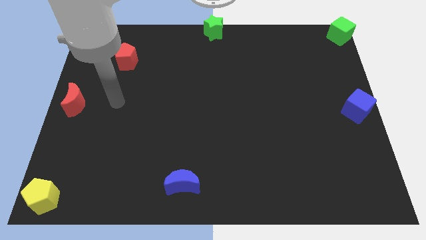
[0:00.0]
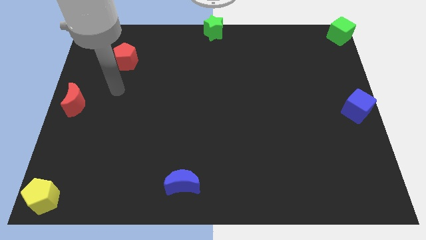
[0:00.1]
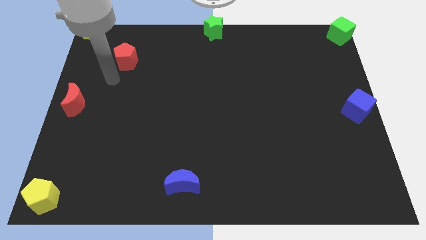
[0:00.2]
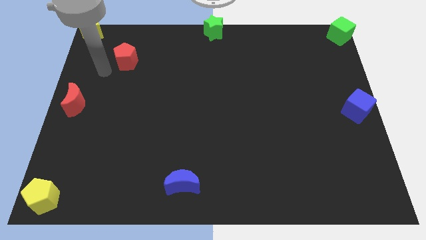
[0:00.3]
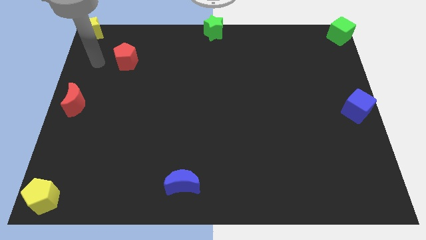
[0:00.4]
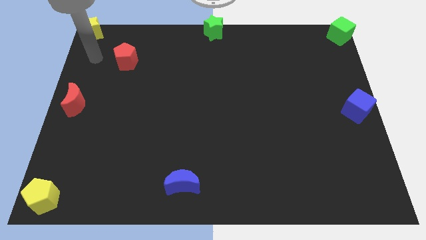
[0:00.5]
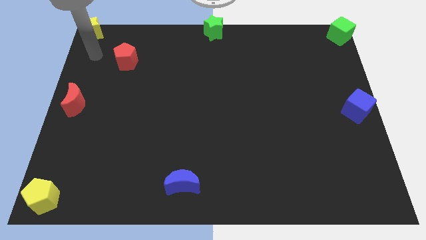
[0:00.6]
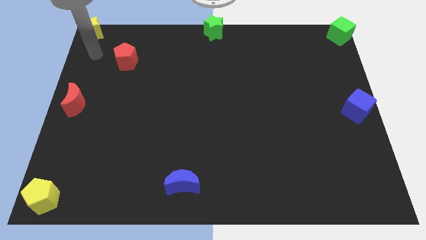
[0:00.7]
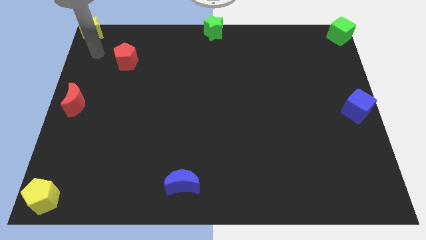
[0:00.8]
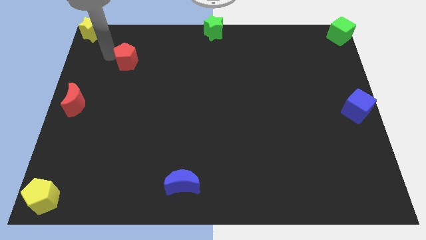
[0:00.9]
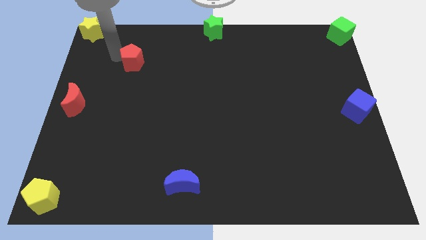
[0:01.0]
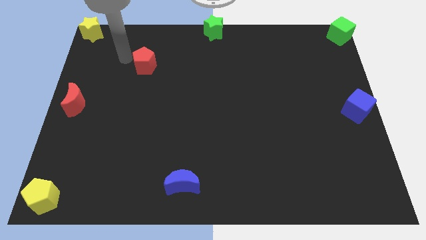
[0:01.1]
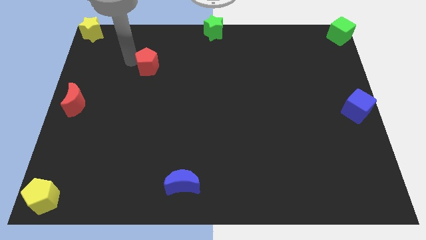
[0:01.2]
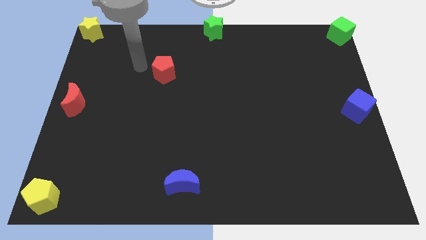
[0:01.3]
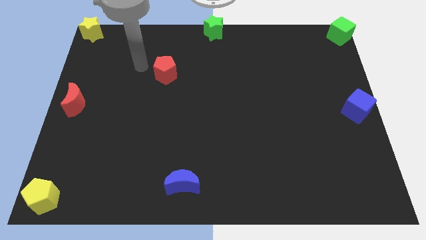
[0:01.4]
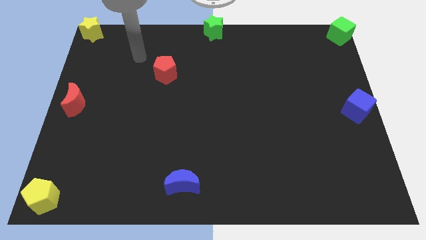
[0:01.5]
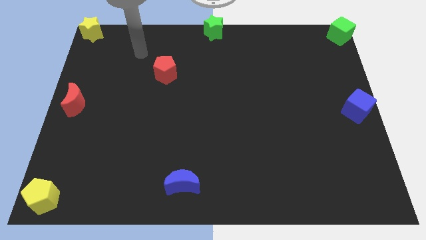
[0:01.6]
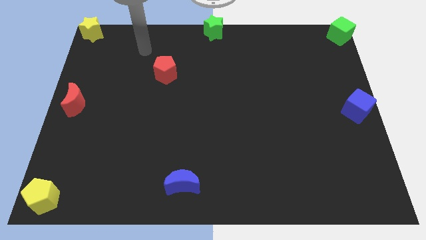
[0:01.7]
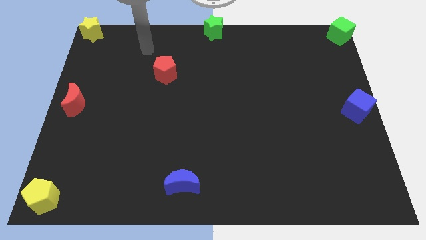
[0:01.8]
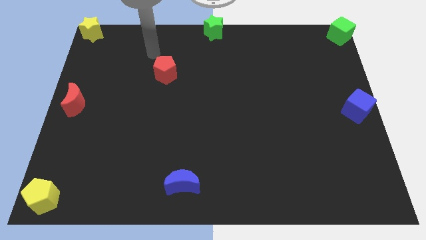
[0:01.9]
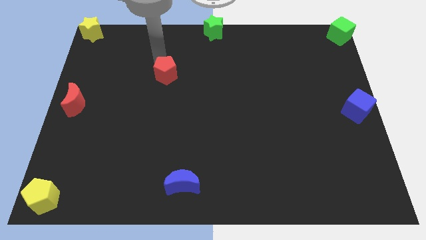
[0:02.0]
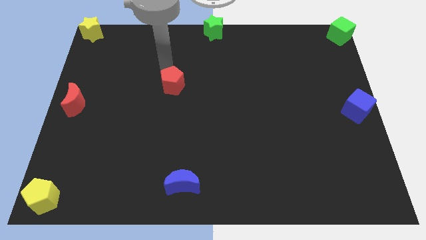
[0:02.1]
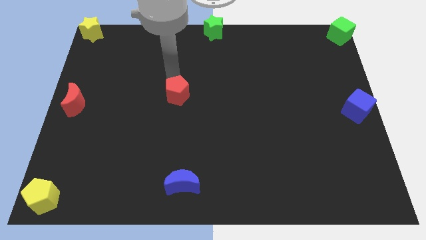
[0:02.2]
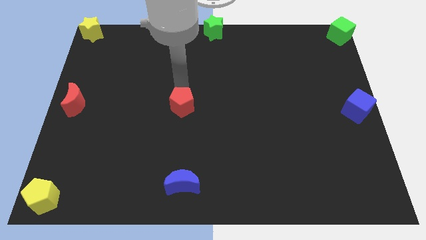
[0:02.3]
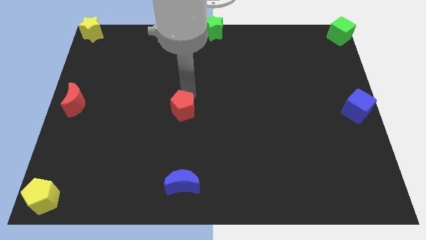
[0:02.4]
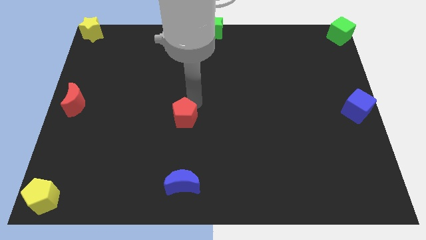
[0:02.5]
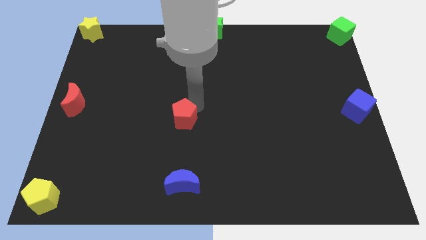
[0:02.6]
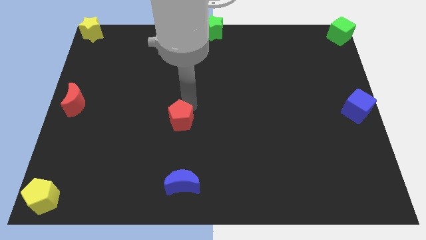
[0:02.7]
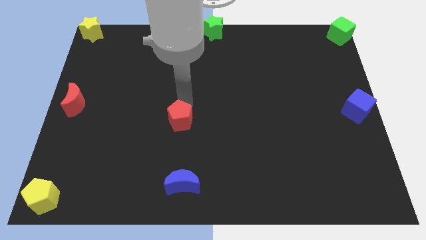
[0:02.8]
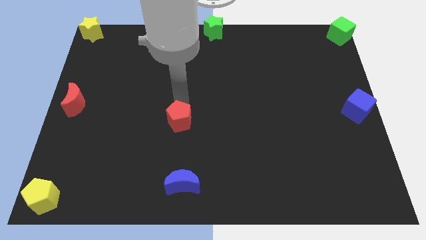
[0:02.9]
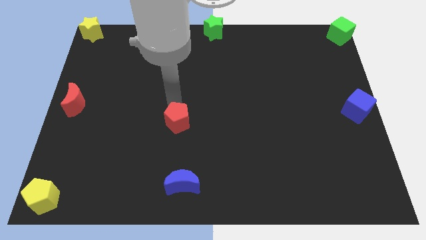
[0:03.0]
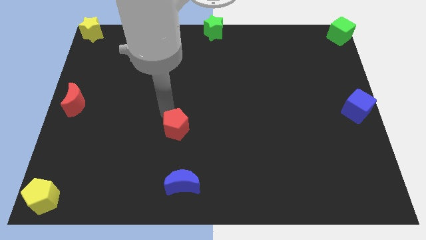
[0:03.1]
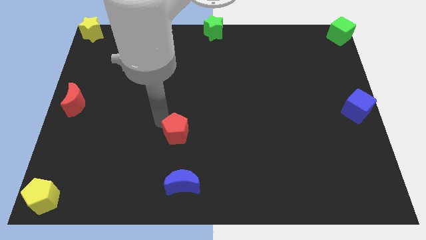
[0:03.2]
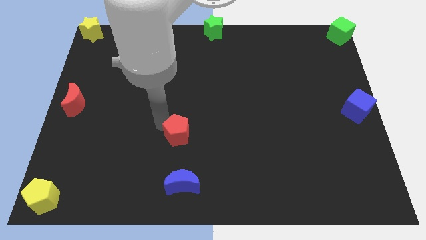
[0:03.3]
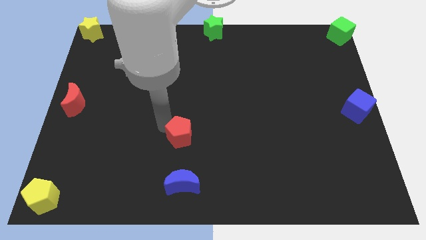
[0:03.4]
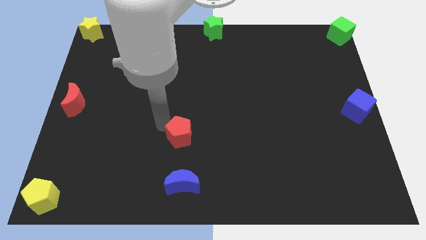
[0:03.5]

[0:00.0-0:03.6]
push red pentagon above blue crescent

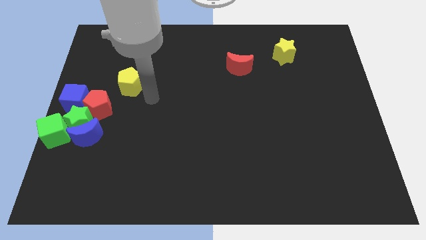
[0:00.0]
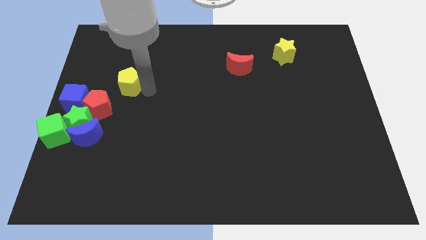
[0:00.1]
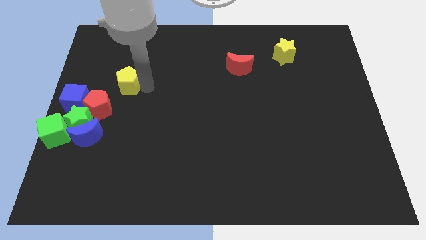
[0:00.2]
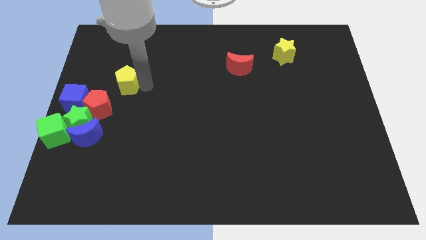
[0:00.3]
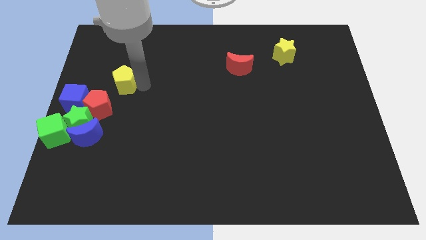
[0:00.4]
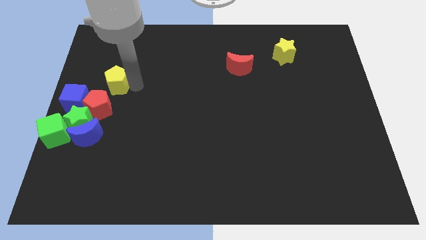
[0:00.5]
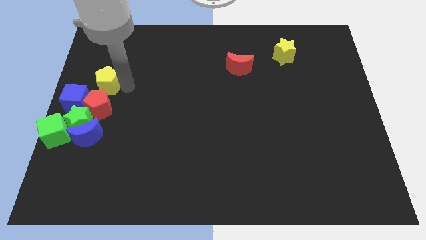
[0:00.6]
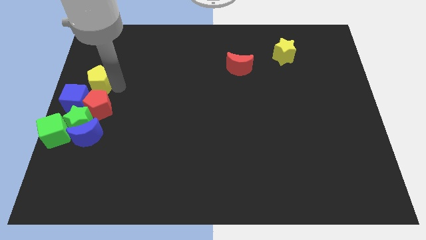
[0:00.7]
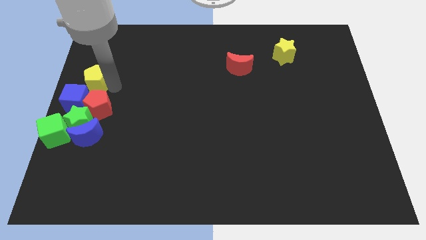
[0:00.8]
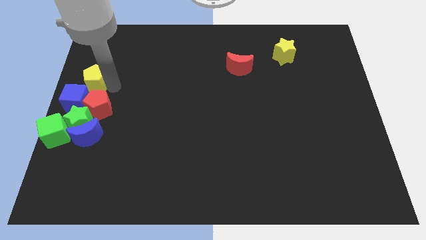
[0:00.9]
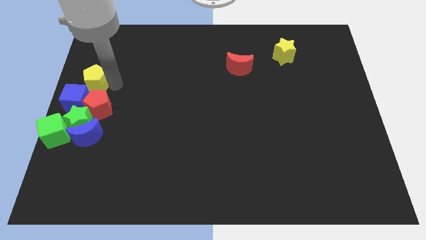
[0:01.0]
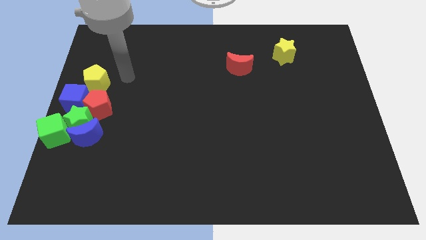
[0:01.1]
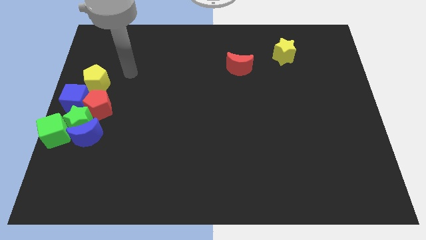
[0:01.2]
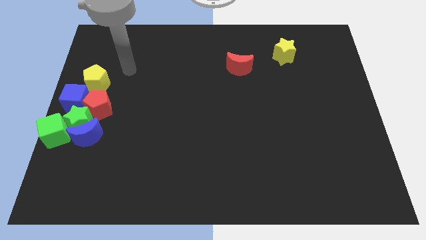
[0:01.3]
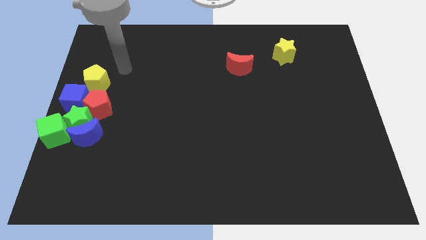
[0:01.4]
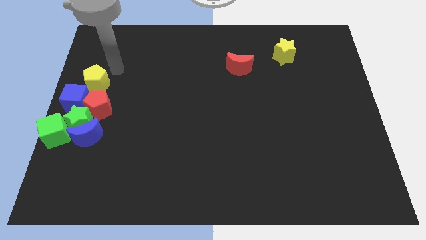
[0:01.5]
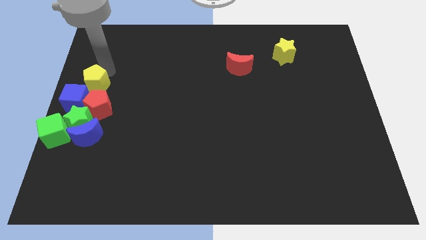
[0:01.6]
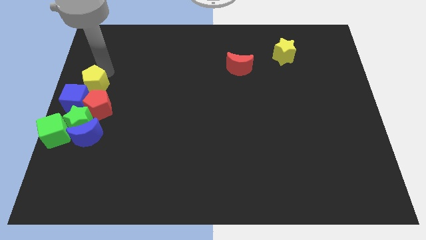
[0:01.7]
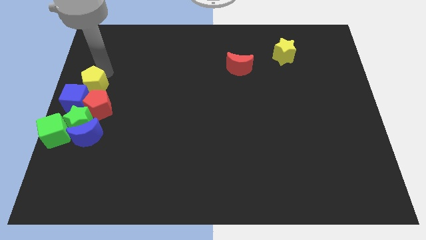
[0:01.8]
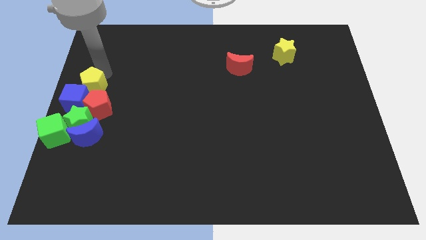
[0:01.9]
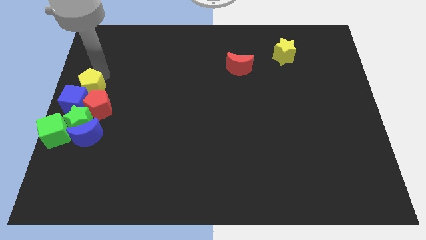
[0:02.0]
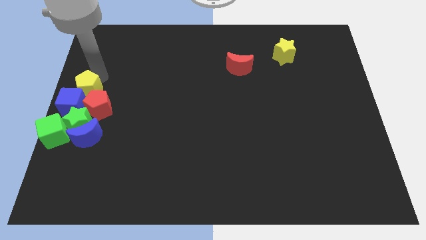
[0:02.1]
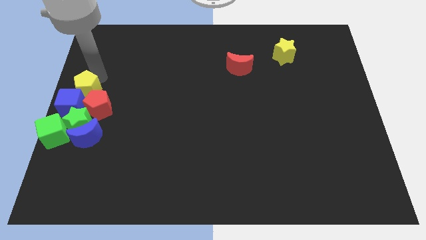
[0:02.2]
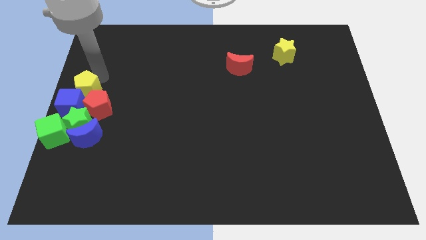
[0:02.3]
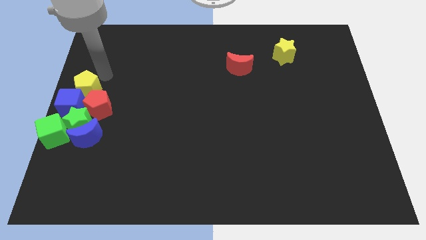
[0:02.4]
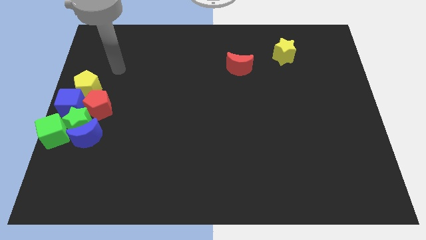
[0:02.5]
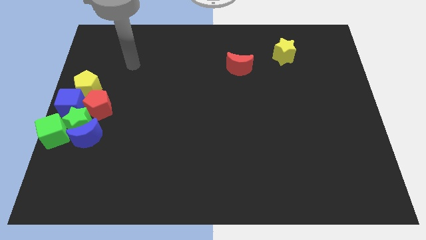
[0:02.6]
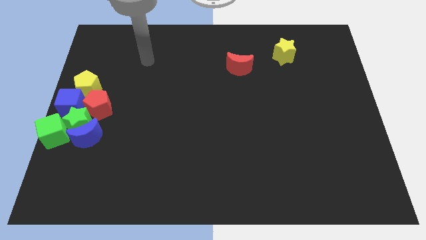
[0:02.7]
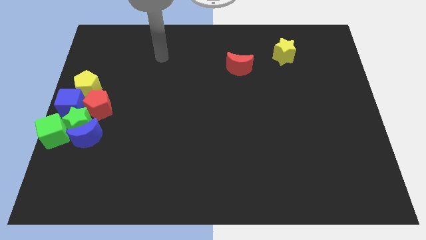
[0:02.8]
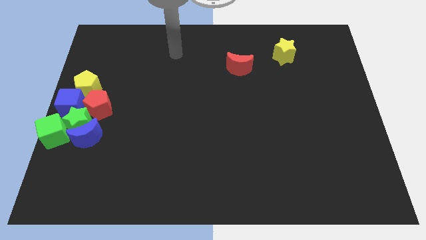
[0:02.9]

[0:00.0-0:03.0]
move the yellow pentagon towards a group of block

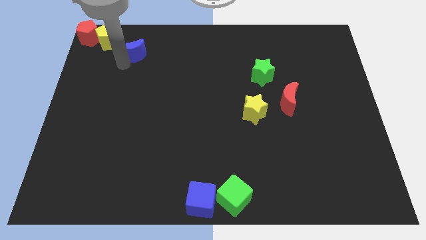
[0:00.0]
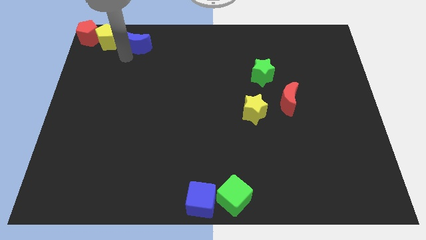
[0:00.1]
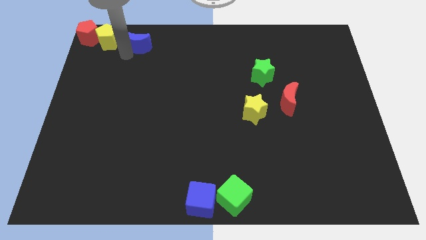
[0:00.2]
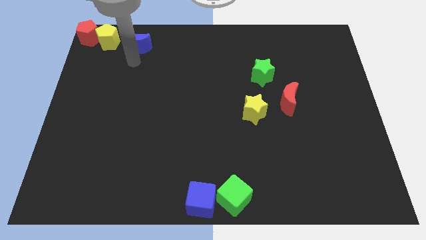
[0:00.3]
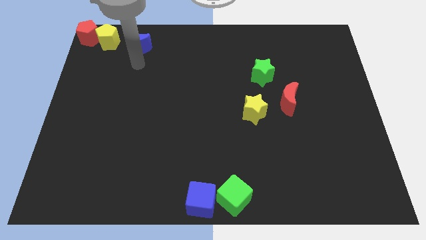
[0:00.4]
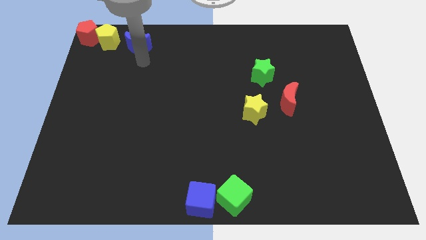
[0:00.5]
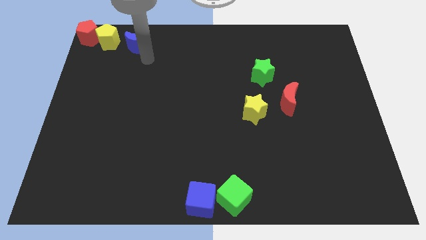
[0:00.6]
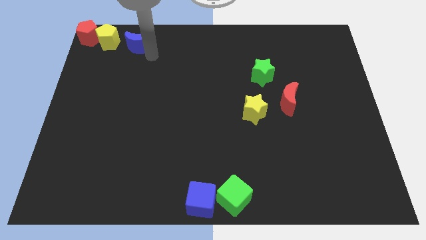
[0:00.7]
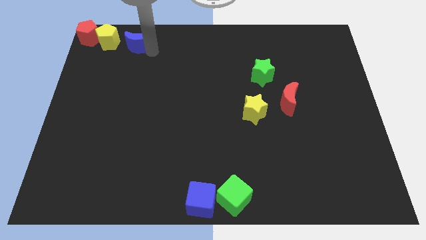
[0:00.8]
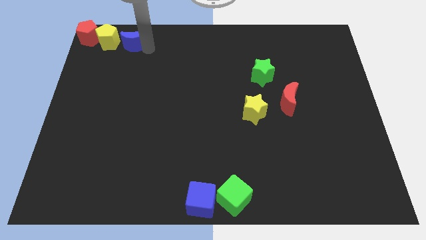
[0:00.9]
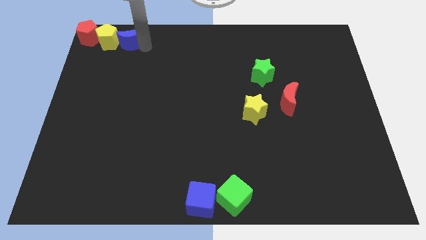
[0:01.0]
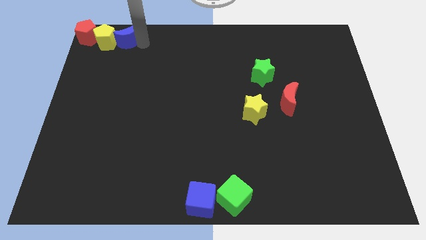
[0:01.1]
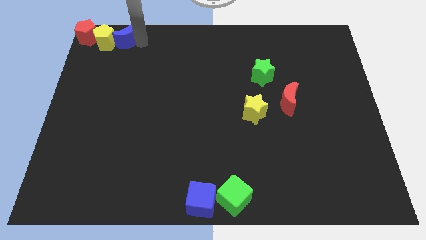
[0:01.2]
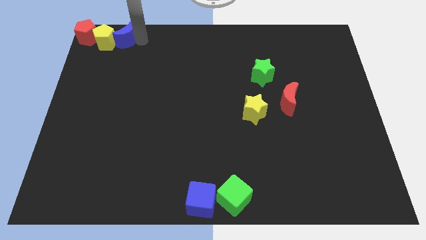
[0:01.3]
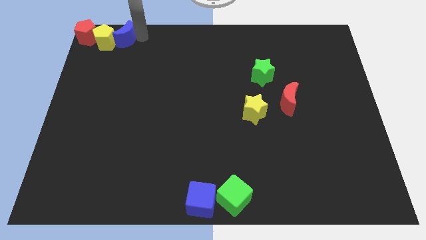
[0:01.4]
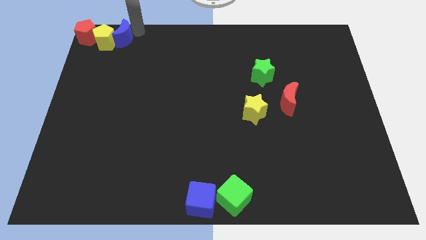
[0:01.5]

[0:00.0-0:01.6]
move the blue moon to the right side of the yellow pentagon

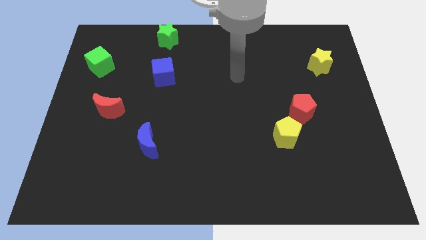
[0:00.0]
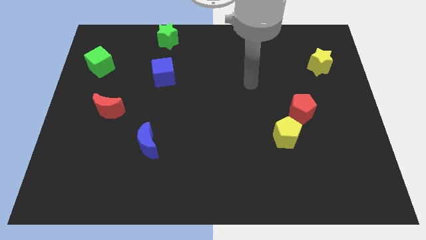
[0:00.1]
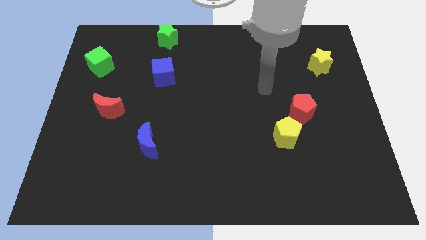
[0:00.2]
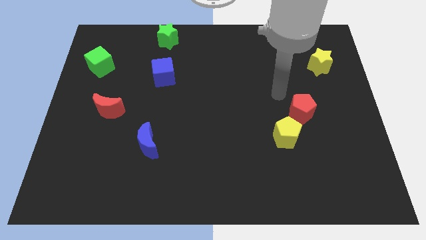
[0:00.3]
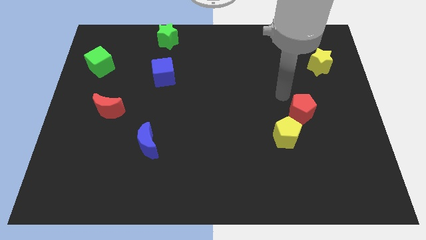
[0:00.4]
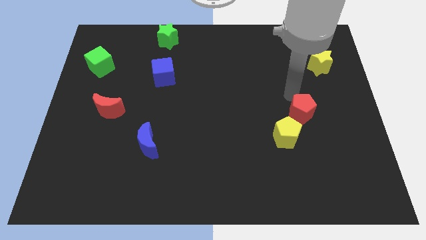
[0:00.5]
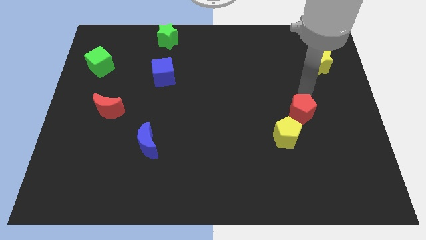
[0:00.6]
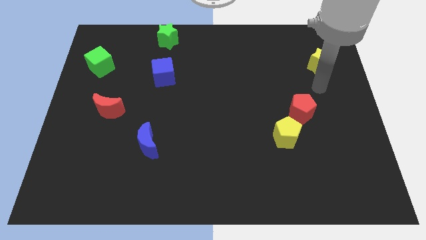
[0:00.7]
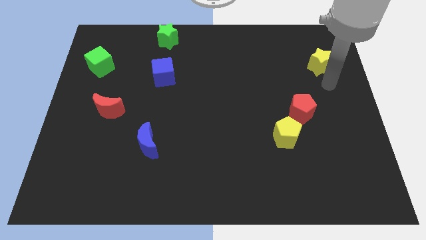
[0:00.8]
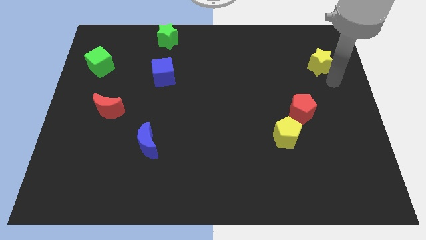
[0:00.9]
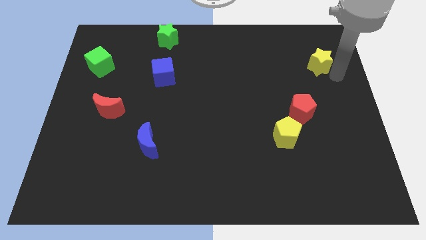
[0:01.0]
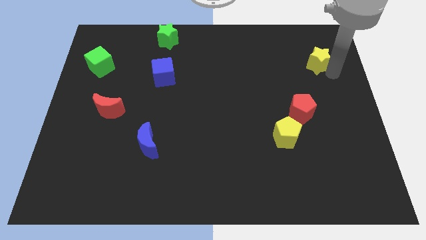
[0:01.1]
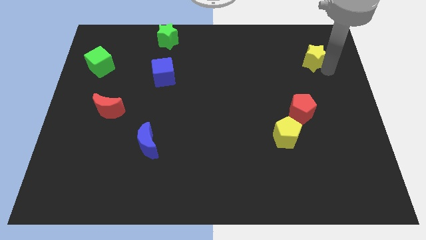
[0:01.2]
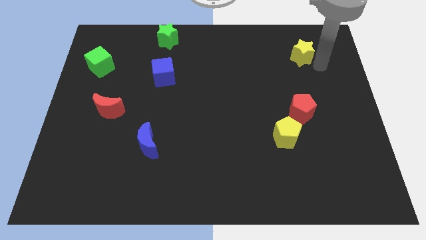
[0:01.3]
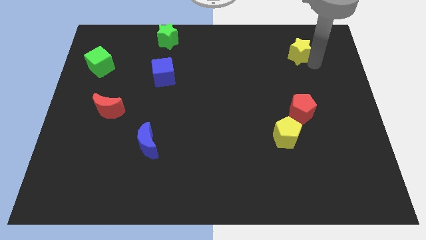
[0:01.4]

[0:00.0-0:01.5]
push the yellow star vertically to the top side of the red pentagon
